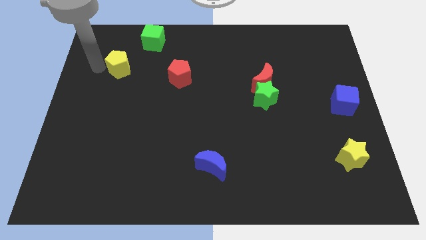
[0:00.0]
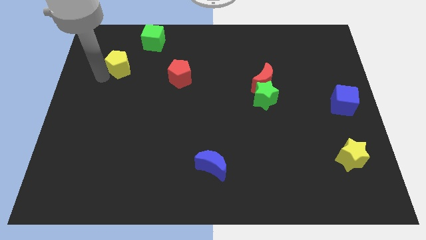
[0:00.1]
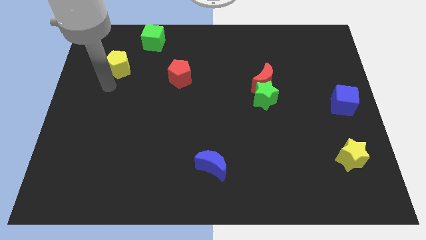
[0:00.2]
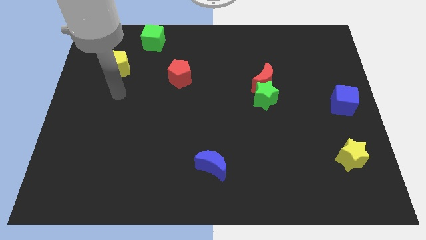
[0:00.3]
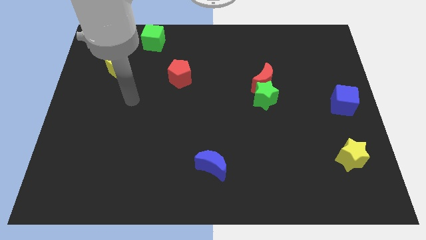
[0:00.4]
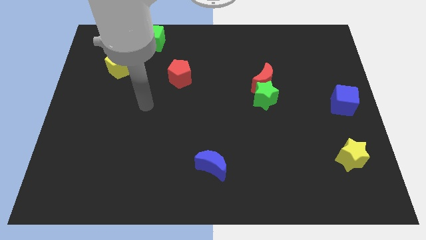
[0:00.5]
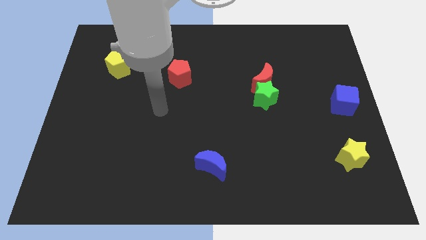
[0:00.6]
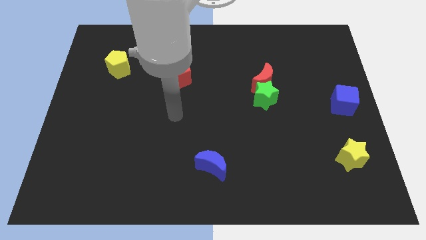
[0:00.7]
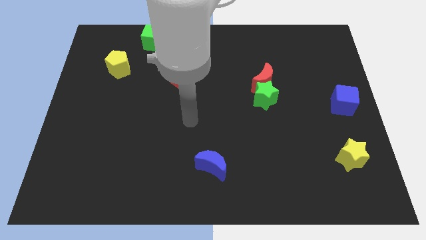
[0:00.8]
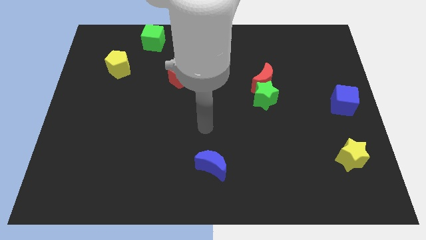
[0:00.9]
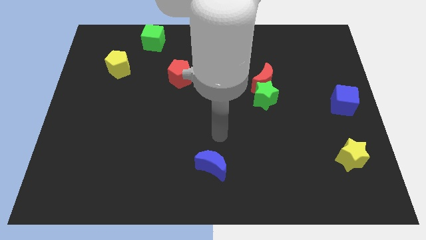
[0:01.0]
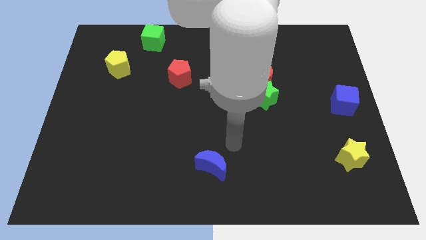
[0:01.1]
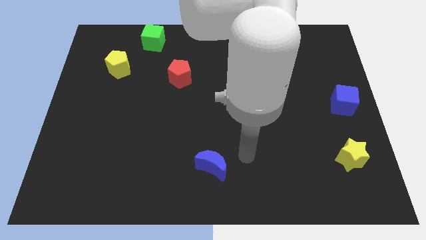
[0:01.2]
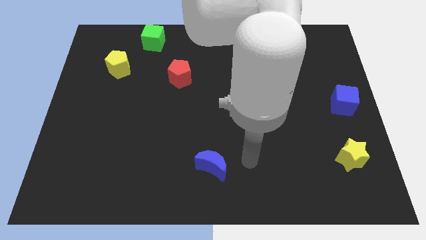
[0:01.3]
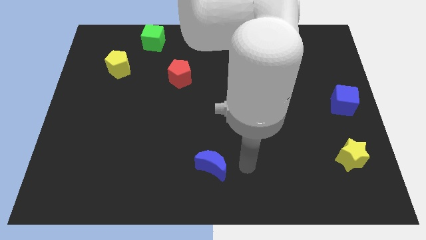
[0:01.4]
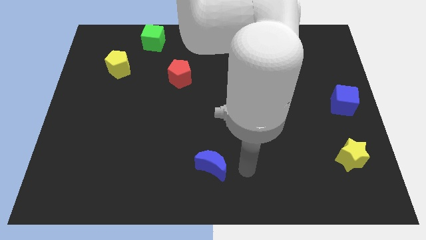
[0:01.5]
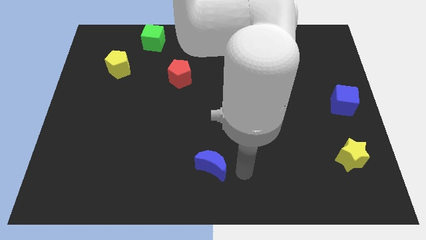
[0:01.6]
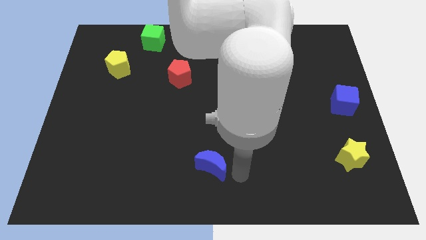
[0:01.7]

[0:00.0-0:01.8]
place your hand at the right side of the blue semicircle

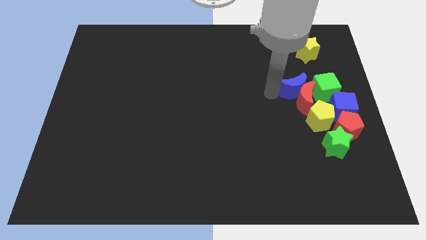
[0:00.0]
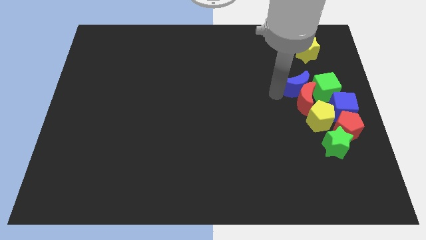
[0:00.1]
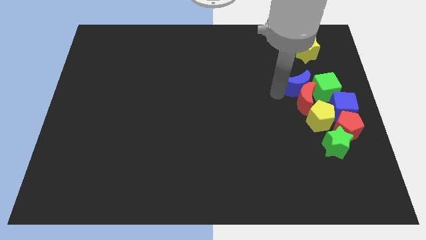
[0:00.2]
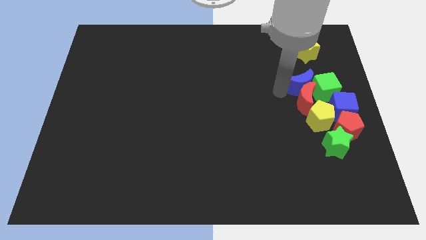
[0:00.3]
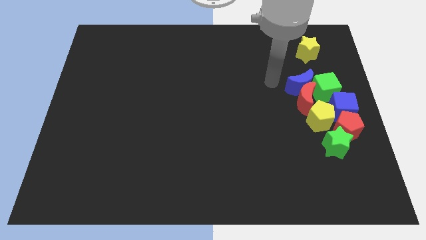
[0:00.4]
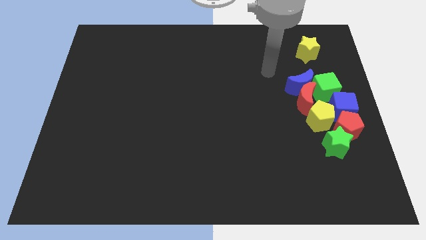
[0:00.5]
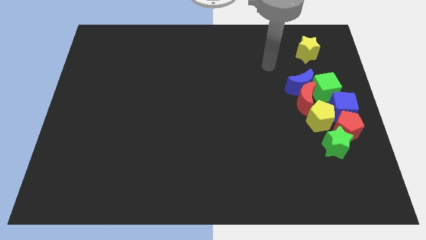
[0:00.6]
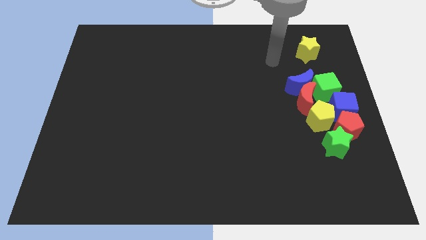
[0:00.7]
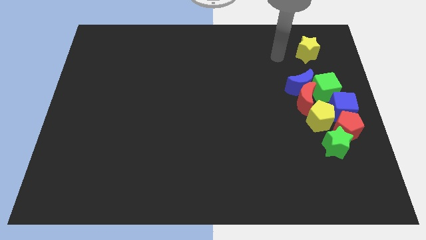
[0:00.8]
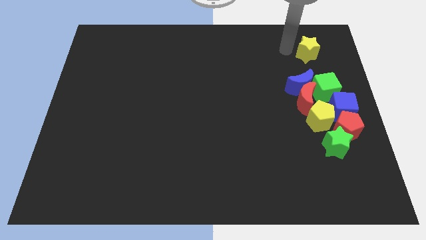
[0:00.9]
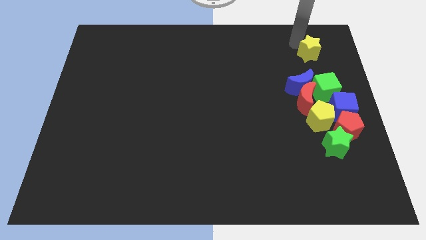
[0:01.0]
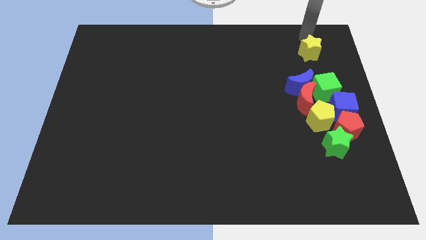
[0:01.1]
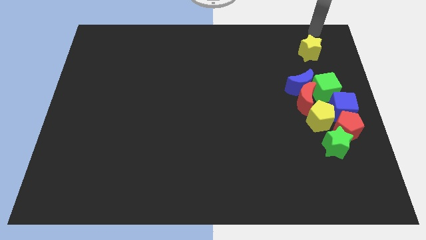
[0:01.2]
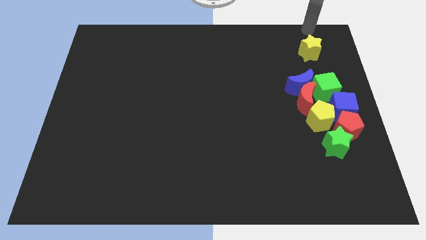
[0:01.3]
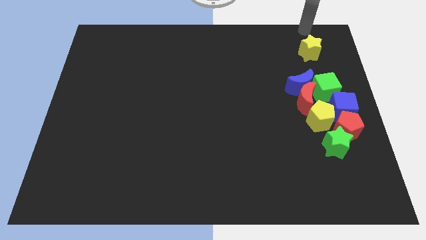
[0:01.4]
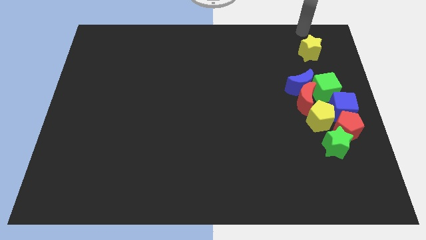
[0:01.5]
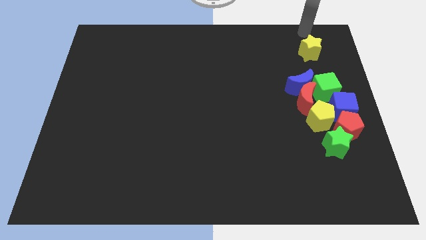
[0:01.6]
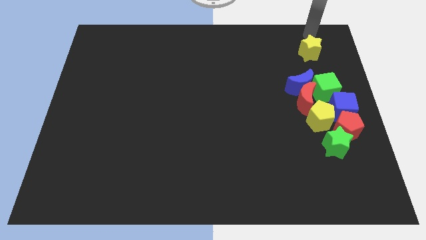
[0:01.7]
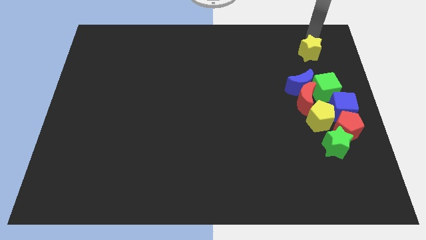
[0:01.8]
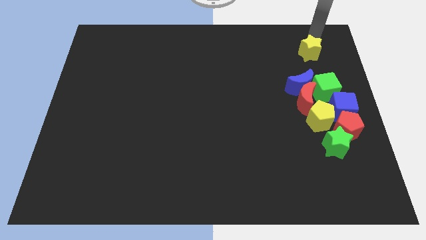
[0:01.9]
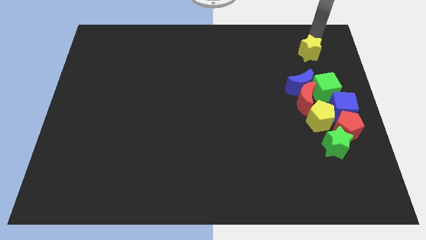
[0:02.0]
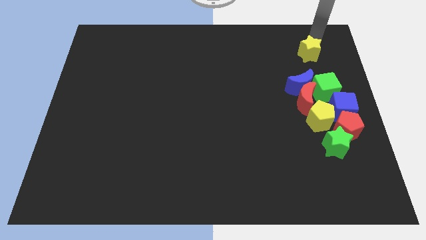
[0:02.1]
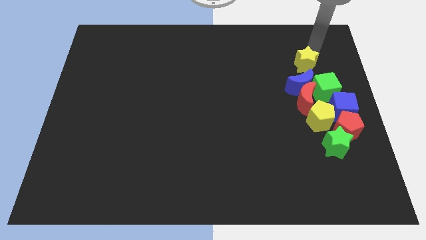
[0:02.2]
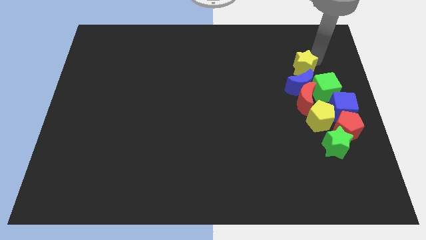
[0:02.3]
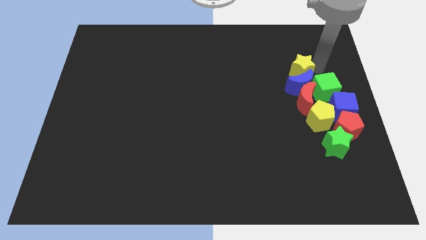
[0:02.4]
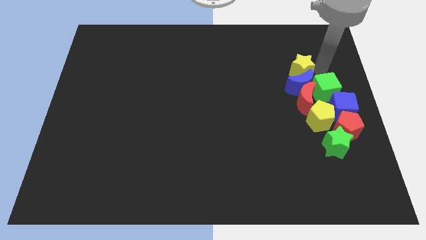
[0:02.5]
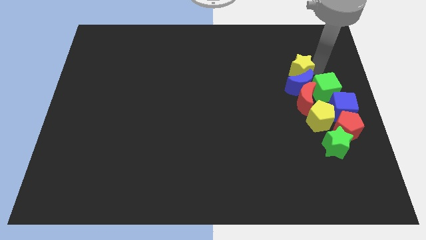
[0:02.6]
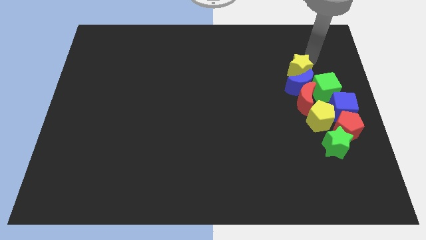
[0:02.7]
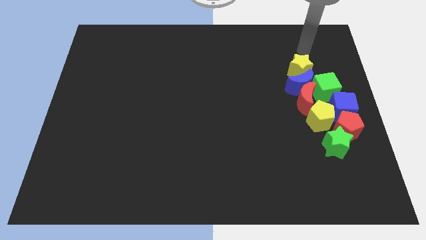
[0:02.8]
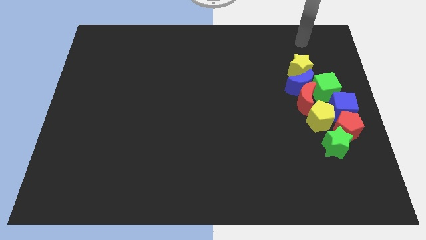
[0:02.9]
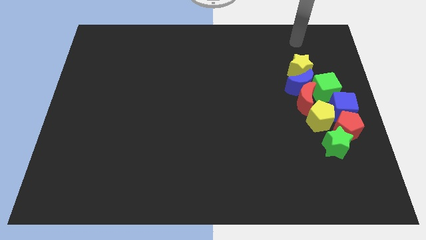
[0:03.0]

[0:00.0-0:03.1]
place the yellow star near to the blue moon

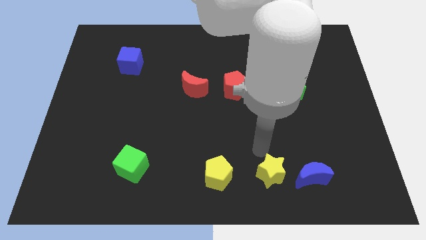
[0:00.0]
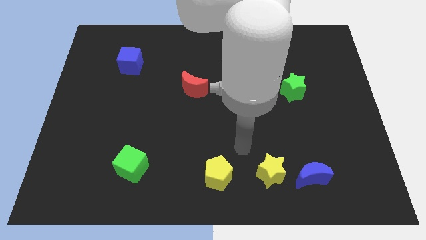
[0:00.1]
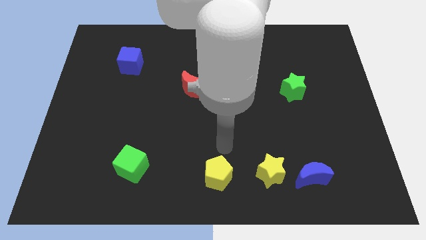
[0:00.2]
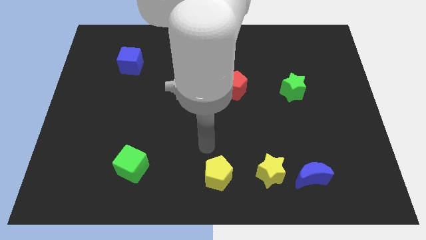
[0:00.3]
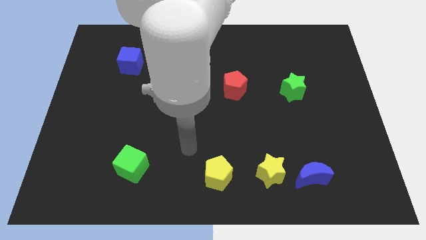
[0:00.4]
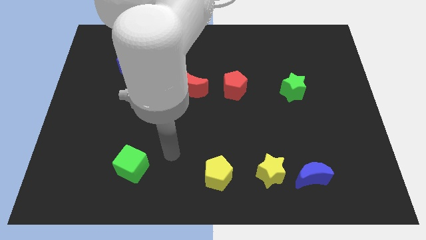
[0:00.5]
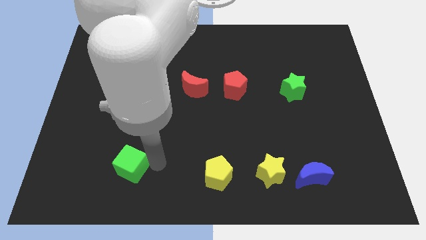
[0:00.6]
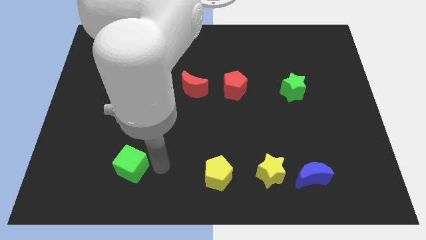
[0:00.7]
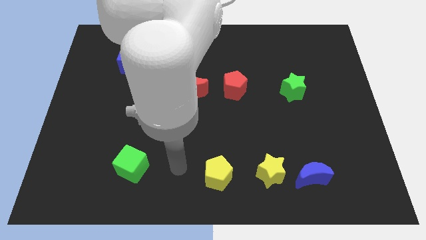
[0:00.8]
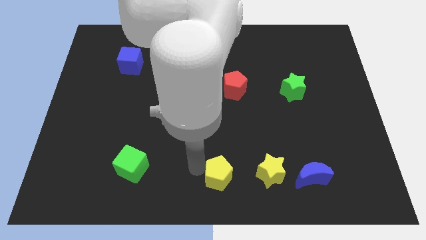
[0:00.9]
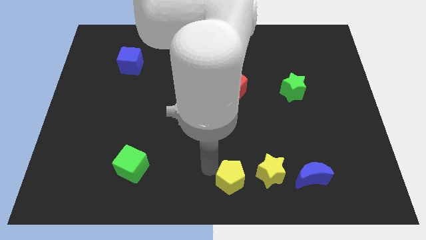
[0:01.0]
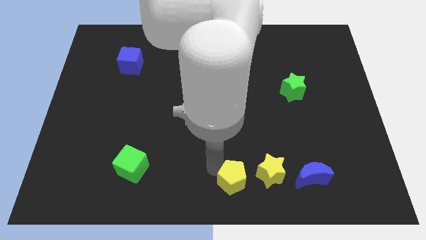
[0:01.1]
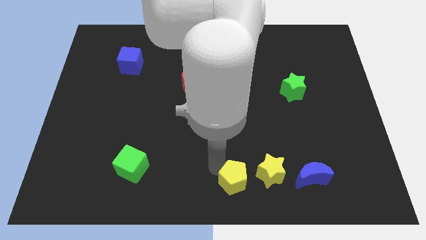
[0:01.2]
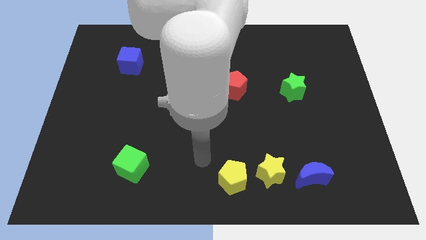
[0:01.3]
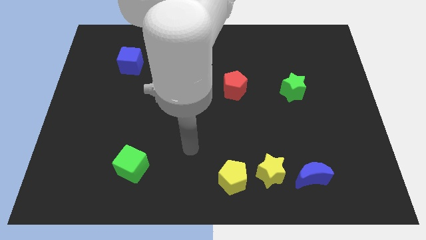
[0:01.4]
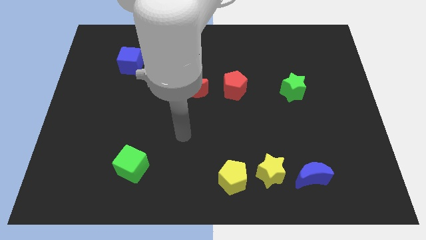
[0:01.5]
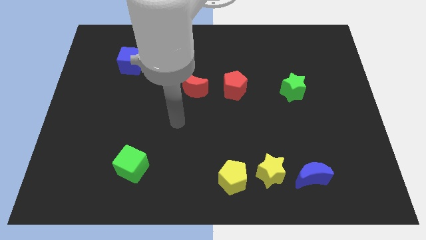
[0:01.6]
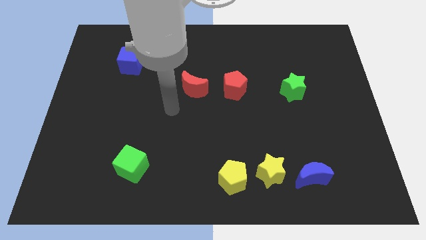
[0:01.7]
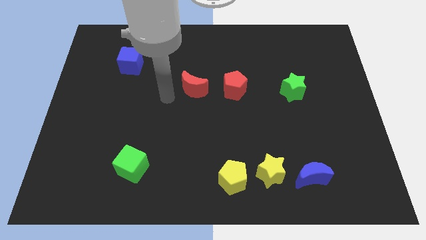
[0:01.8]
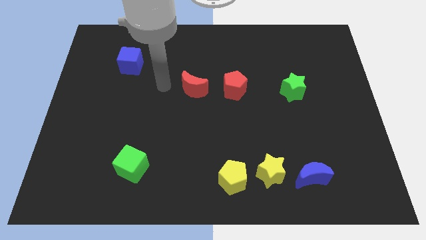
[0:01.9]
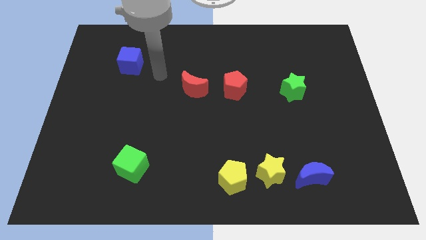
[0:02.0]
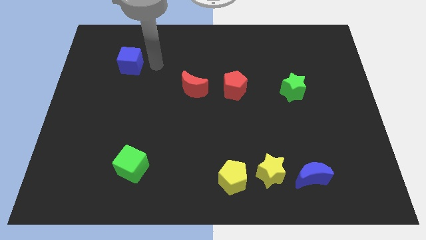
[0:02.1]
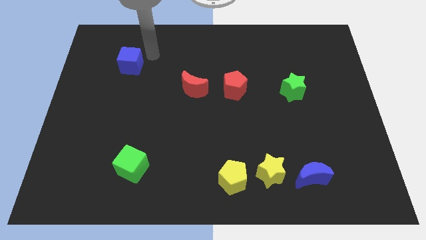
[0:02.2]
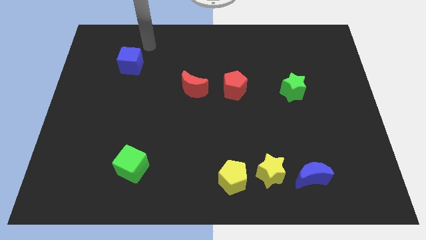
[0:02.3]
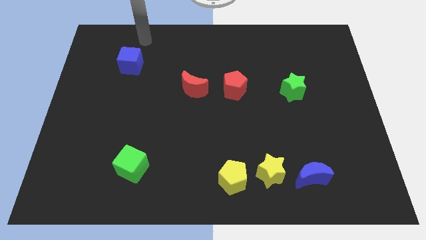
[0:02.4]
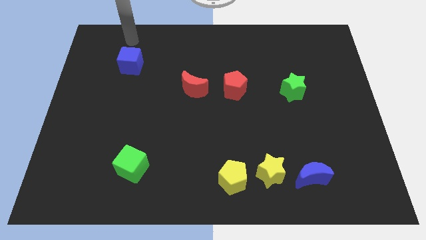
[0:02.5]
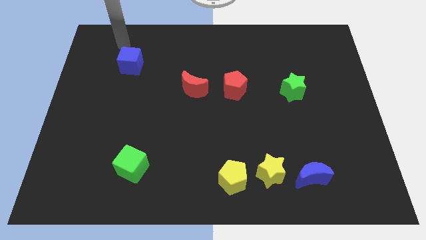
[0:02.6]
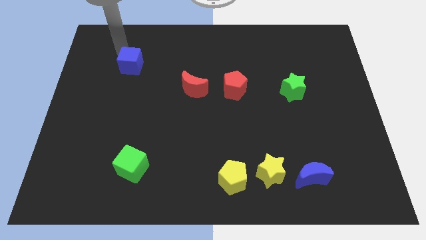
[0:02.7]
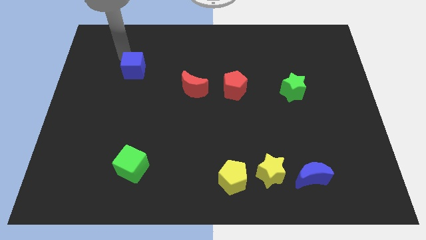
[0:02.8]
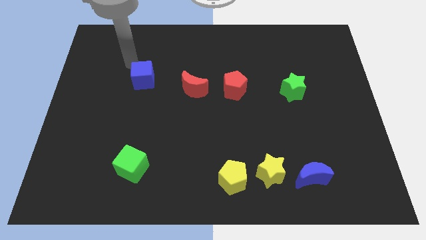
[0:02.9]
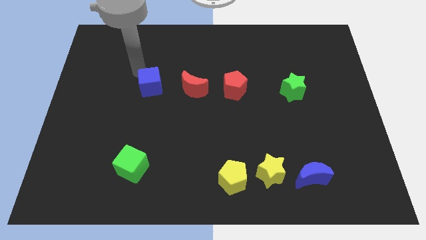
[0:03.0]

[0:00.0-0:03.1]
move yellow pentagon and blue cube towards right side of the board

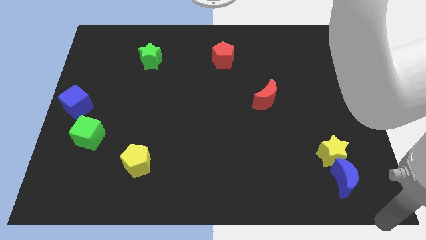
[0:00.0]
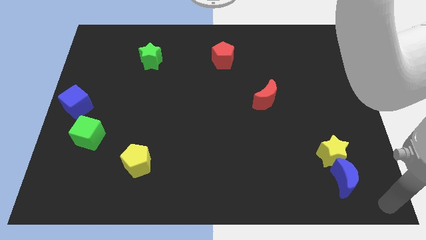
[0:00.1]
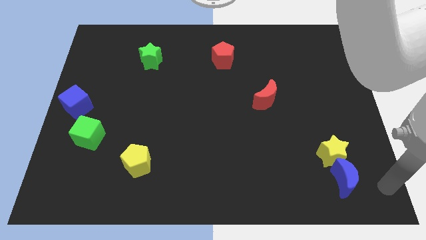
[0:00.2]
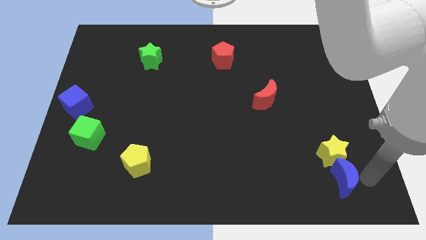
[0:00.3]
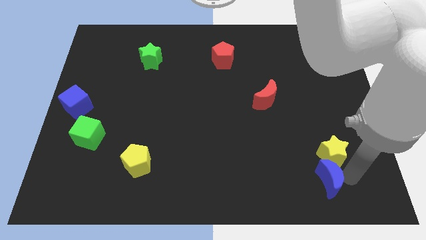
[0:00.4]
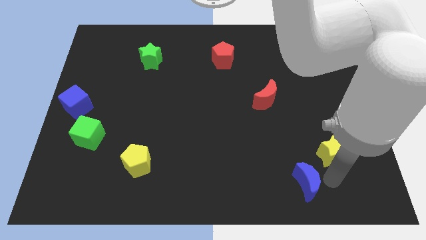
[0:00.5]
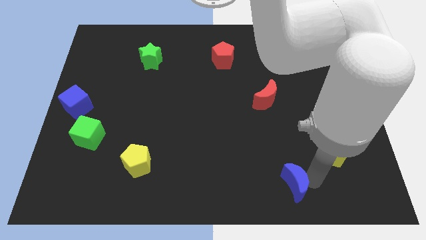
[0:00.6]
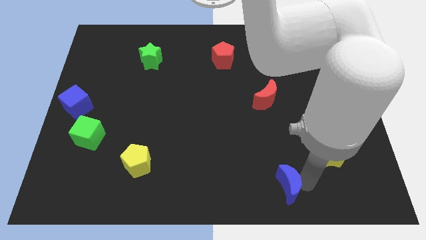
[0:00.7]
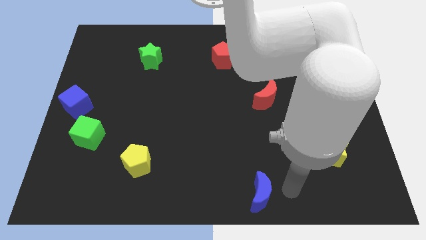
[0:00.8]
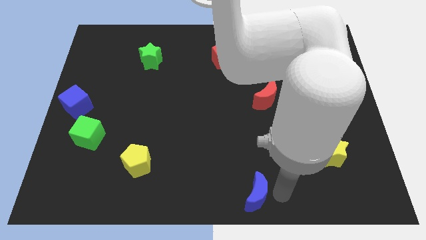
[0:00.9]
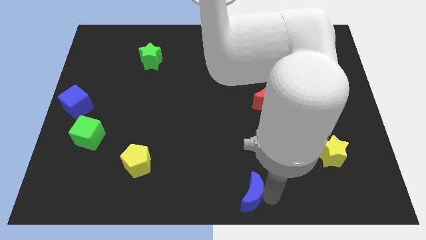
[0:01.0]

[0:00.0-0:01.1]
push the blue crescent to the left of the board
